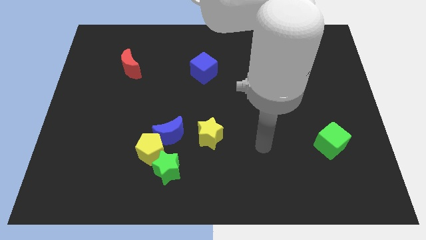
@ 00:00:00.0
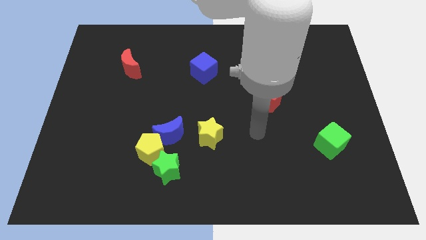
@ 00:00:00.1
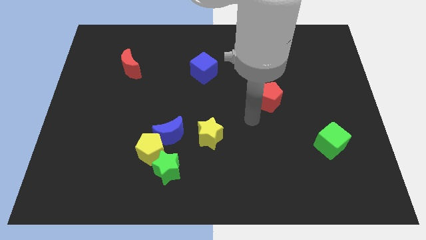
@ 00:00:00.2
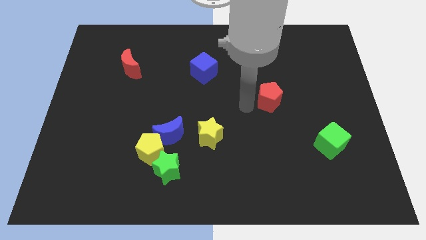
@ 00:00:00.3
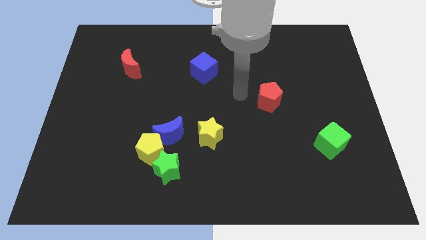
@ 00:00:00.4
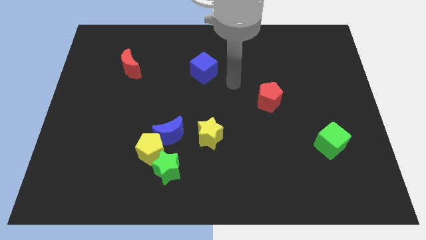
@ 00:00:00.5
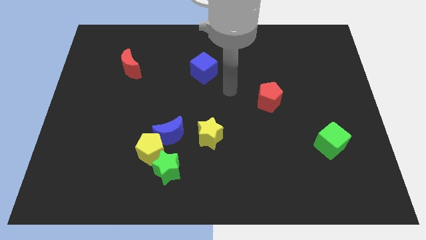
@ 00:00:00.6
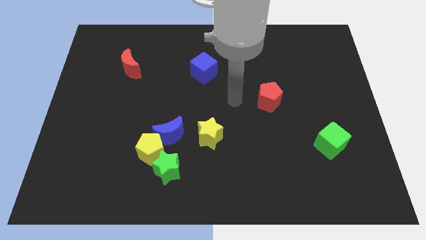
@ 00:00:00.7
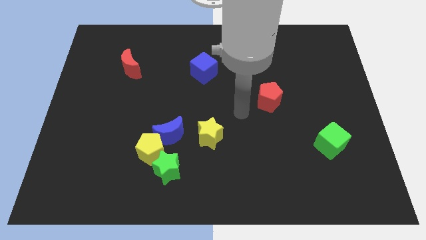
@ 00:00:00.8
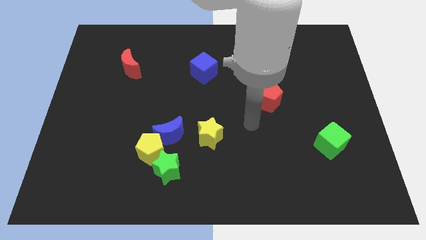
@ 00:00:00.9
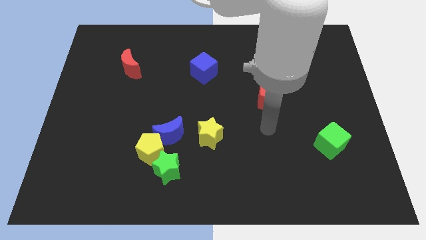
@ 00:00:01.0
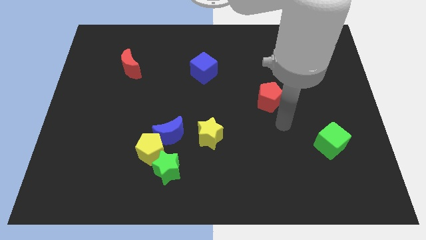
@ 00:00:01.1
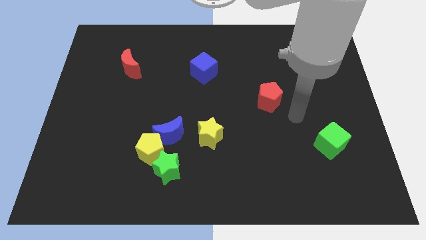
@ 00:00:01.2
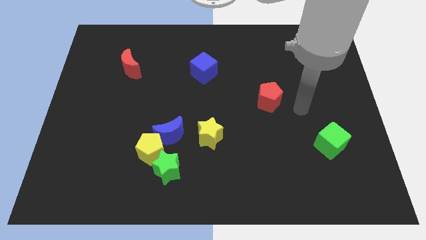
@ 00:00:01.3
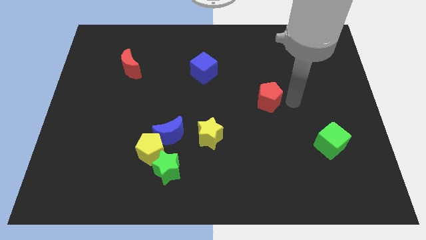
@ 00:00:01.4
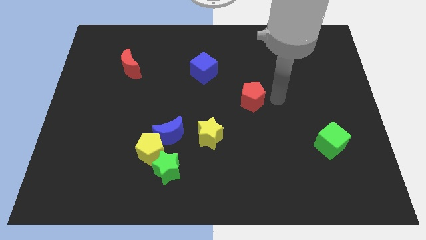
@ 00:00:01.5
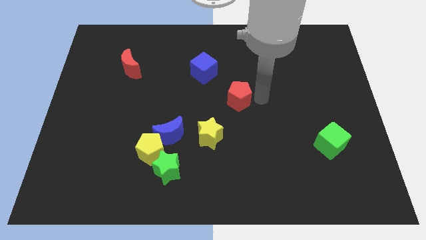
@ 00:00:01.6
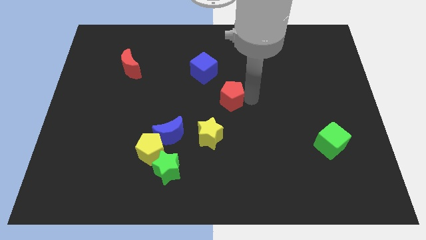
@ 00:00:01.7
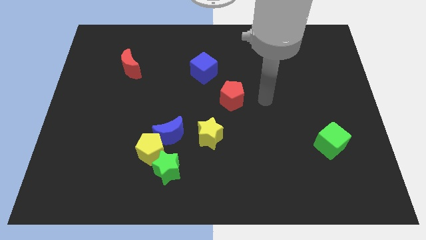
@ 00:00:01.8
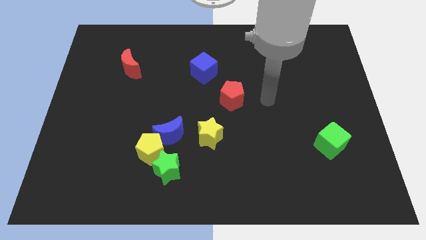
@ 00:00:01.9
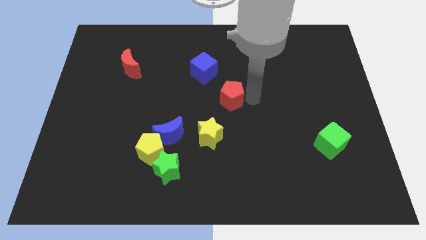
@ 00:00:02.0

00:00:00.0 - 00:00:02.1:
slide the red pentagon towards the center

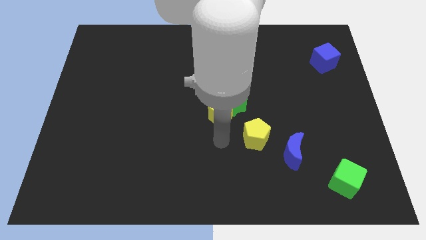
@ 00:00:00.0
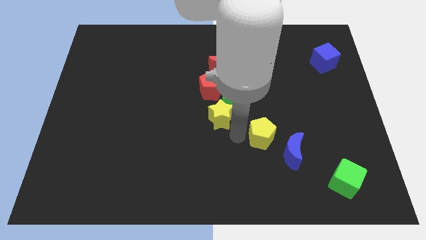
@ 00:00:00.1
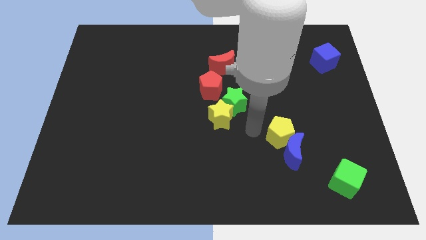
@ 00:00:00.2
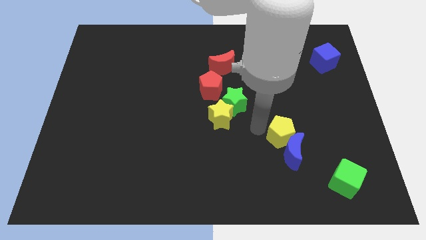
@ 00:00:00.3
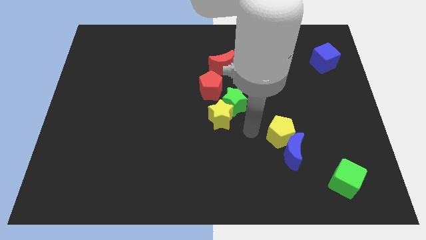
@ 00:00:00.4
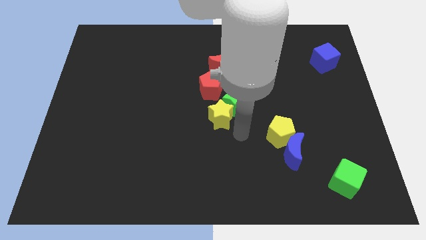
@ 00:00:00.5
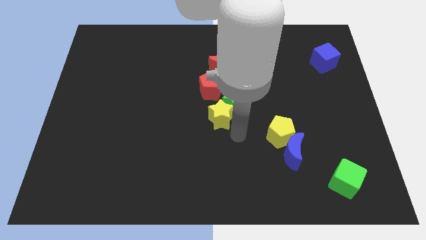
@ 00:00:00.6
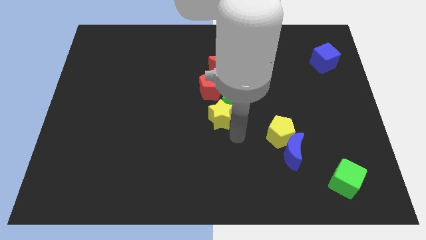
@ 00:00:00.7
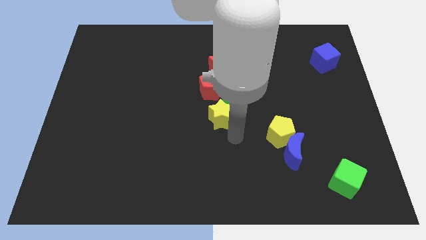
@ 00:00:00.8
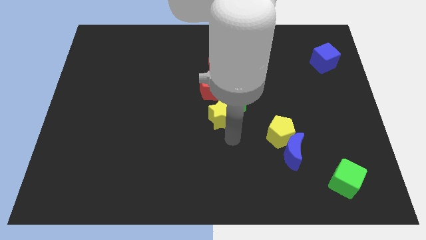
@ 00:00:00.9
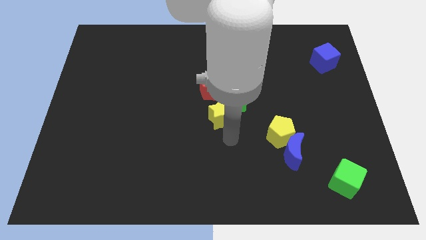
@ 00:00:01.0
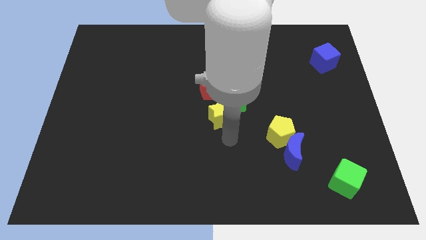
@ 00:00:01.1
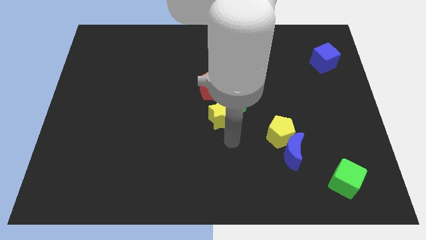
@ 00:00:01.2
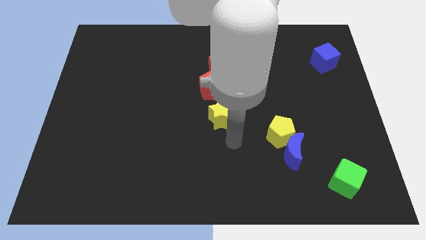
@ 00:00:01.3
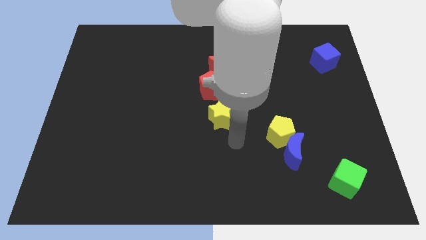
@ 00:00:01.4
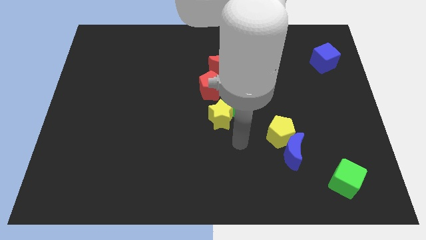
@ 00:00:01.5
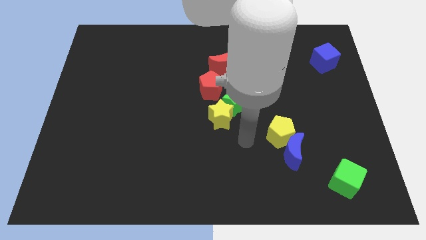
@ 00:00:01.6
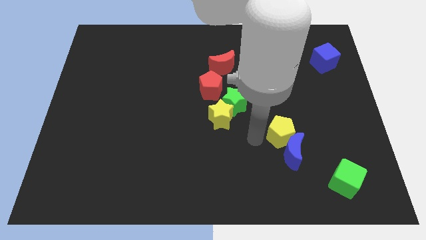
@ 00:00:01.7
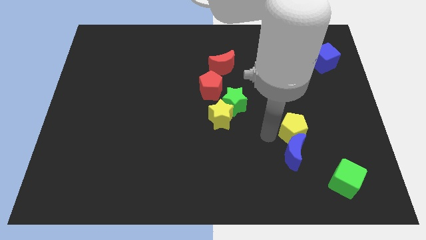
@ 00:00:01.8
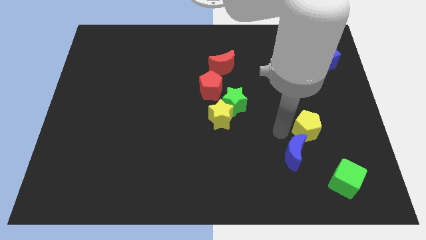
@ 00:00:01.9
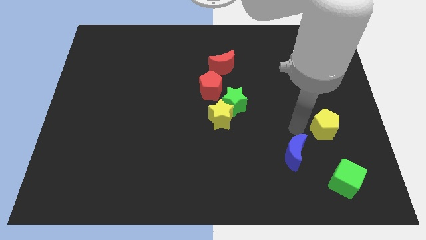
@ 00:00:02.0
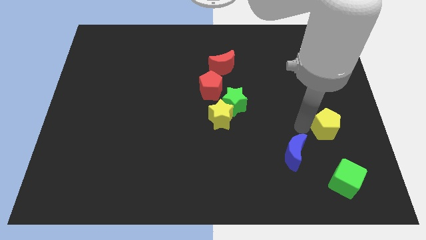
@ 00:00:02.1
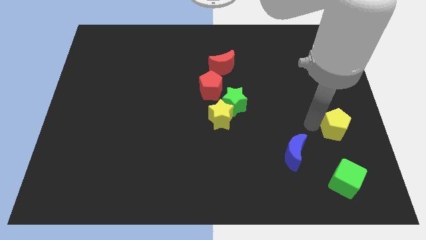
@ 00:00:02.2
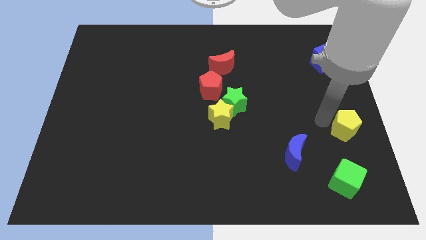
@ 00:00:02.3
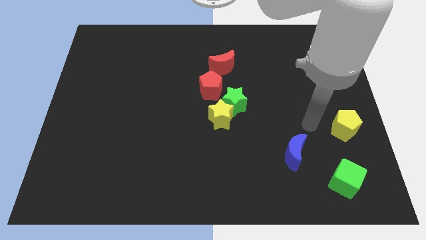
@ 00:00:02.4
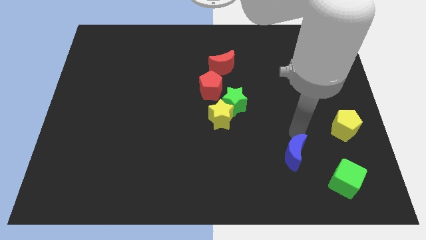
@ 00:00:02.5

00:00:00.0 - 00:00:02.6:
move the yellow pentagon to the top of the green cube

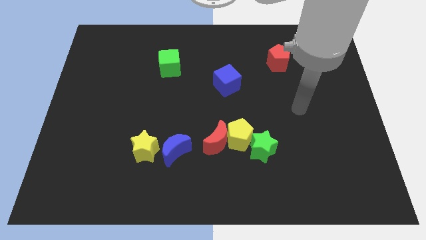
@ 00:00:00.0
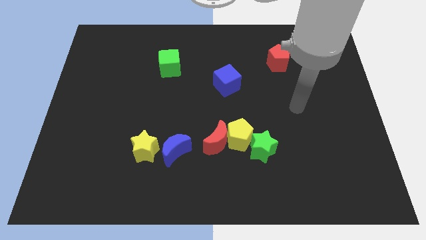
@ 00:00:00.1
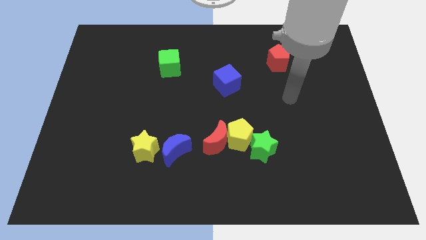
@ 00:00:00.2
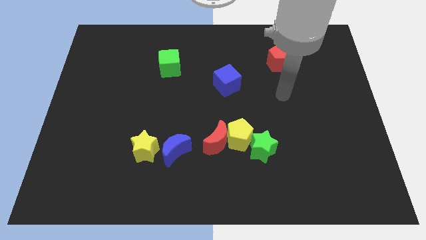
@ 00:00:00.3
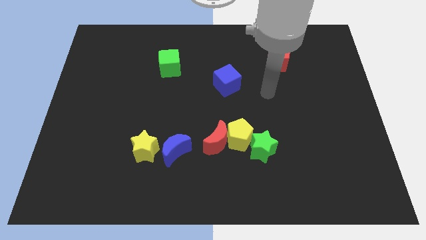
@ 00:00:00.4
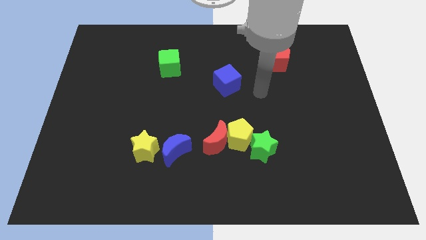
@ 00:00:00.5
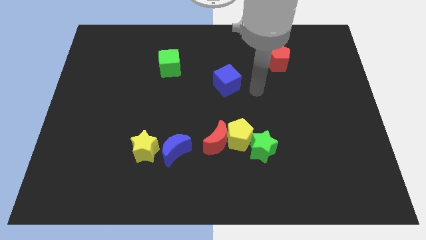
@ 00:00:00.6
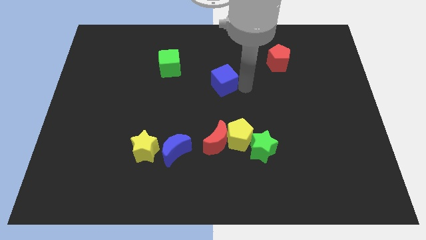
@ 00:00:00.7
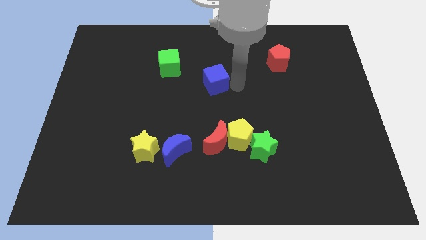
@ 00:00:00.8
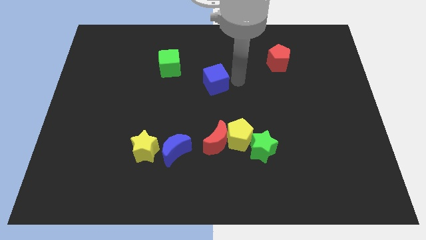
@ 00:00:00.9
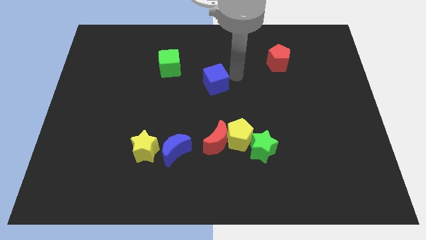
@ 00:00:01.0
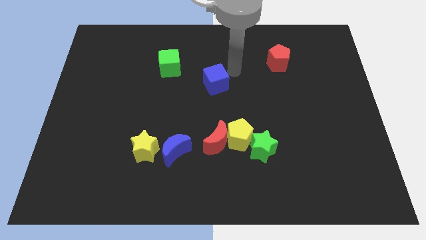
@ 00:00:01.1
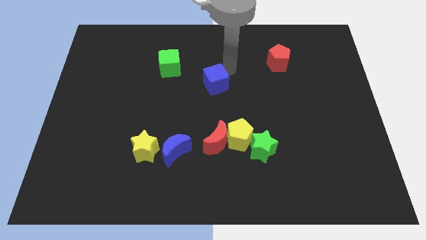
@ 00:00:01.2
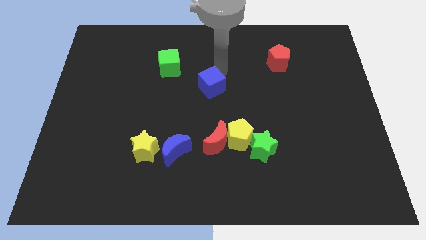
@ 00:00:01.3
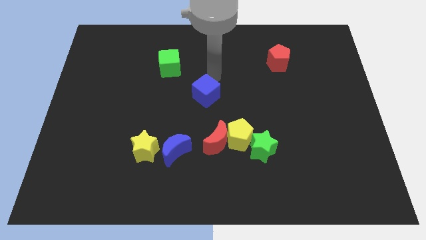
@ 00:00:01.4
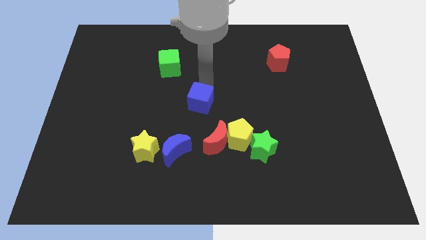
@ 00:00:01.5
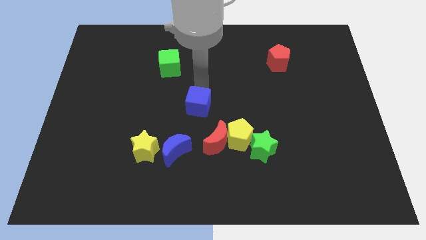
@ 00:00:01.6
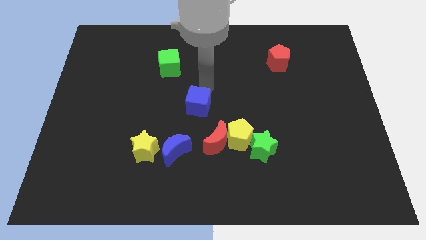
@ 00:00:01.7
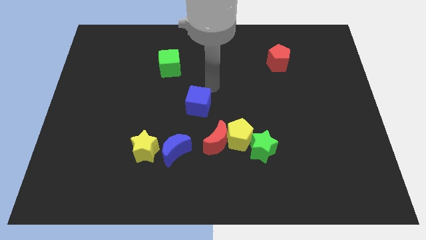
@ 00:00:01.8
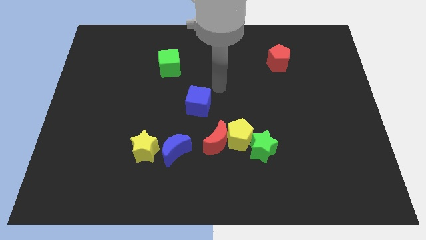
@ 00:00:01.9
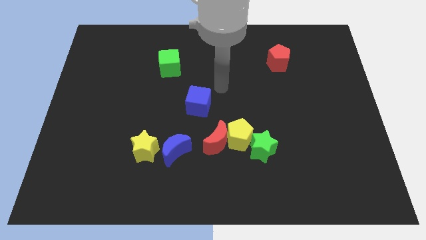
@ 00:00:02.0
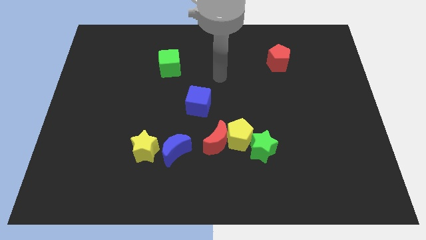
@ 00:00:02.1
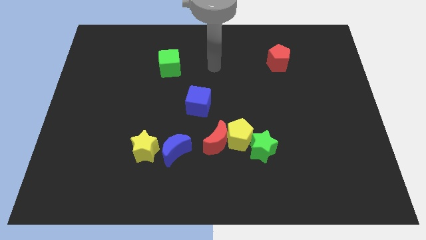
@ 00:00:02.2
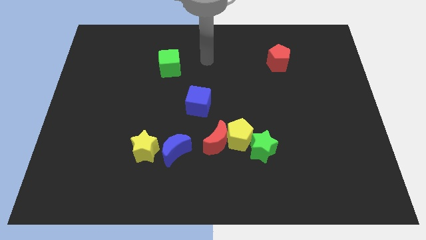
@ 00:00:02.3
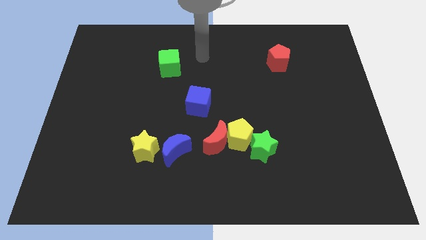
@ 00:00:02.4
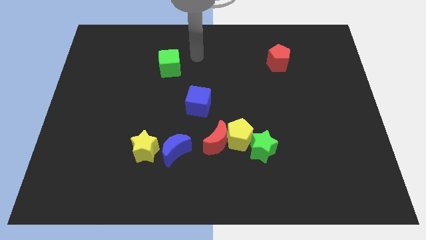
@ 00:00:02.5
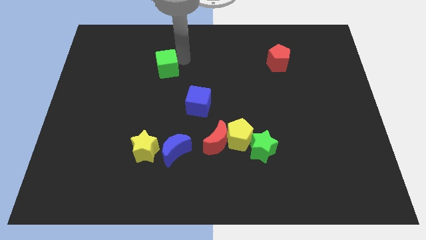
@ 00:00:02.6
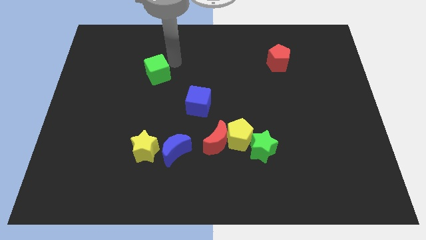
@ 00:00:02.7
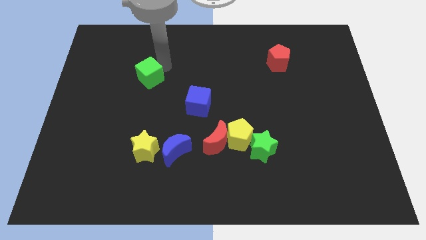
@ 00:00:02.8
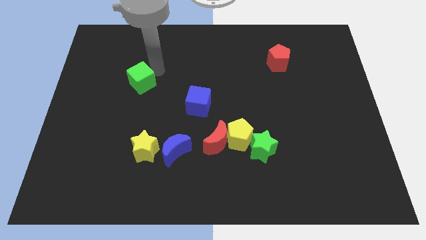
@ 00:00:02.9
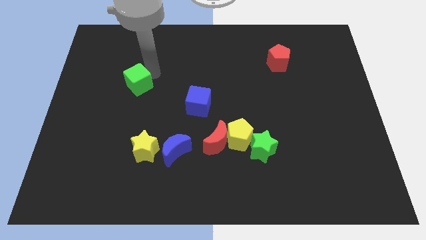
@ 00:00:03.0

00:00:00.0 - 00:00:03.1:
adjust both the cubes diagonal to each other

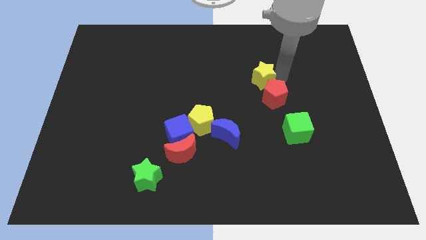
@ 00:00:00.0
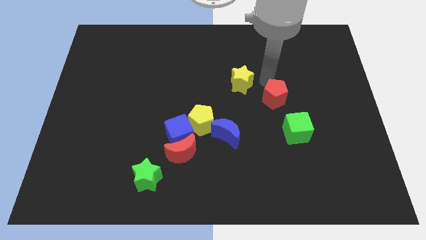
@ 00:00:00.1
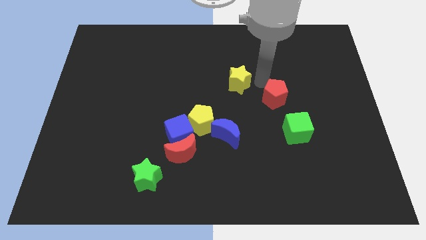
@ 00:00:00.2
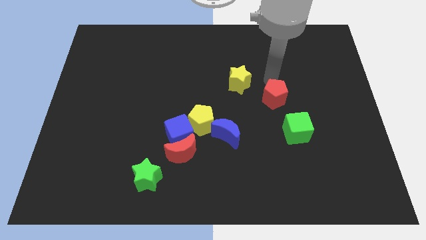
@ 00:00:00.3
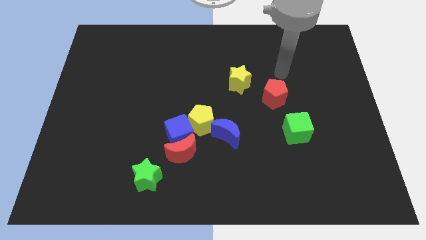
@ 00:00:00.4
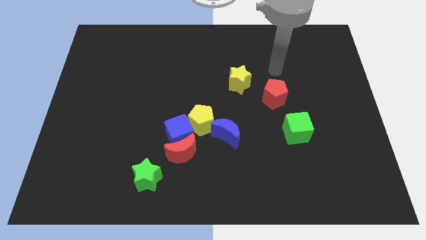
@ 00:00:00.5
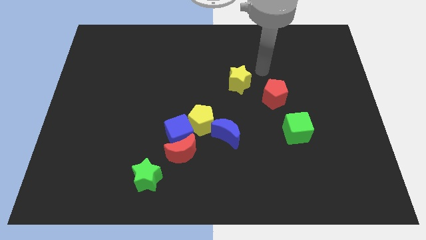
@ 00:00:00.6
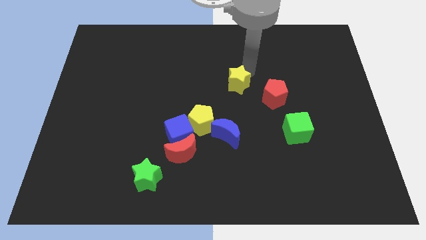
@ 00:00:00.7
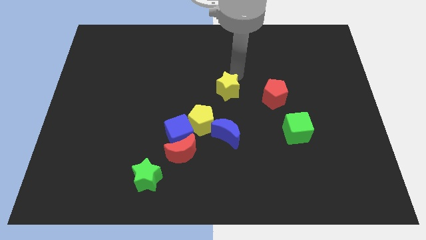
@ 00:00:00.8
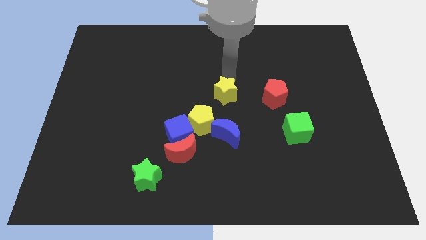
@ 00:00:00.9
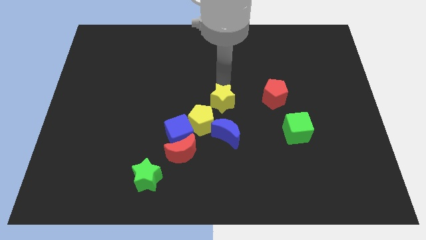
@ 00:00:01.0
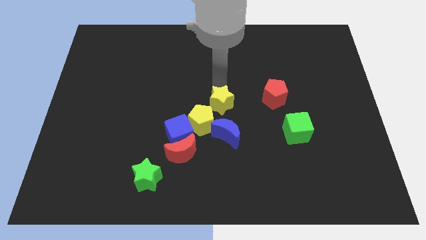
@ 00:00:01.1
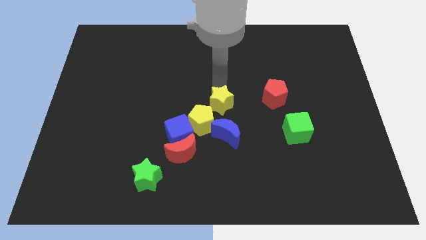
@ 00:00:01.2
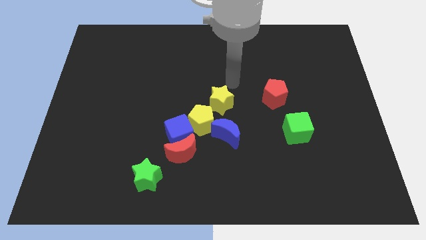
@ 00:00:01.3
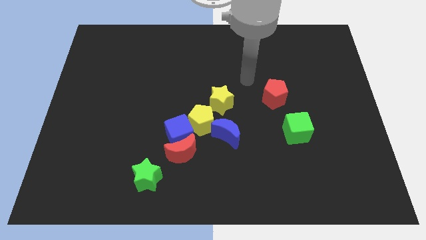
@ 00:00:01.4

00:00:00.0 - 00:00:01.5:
place yellow star to the top right of the yellow pentagon
